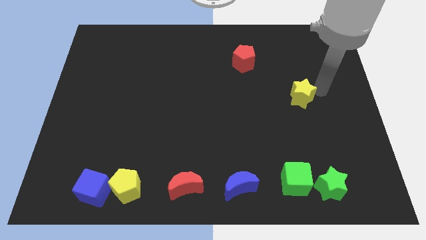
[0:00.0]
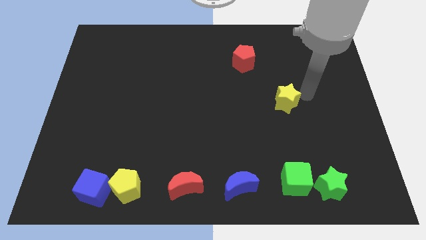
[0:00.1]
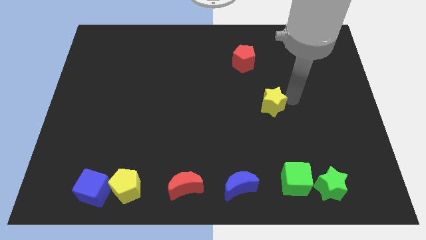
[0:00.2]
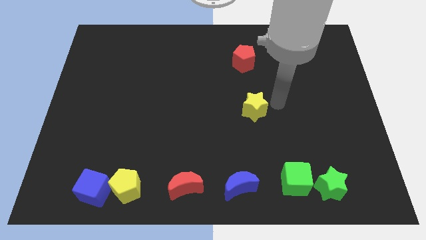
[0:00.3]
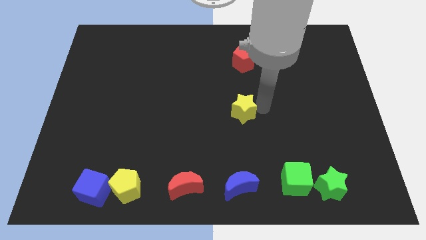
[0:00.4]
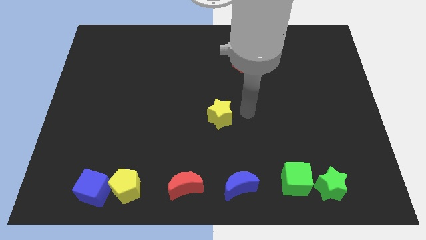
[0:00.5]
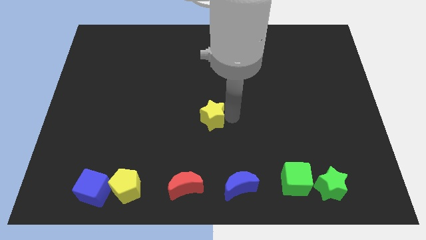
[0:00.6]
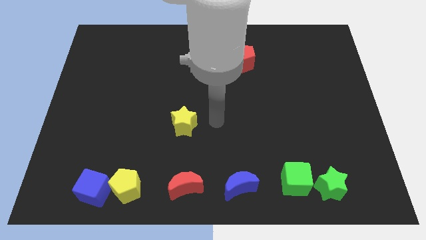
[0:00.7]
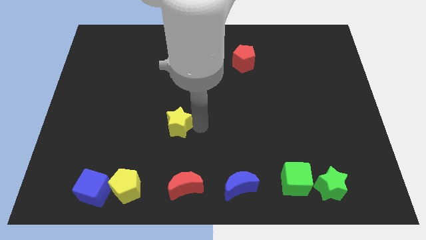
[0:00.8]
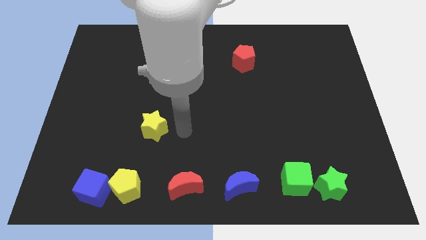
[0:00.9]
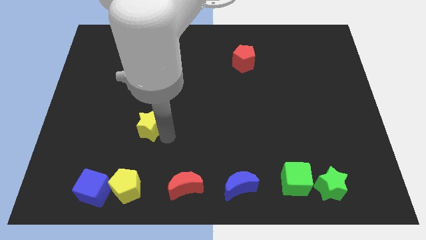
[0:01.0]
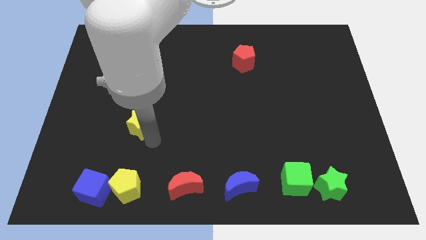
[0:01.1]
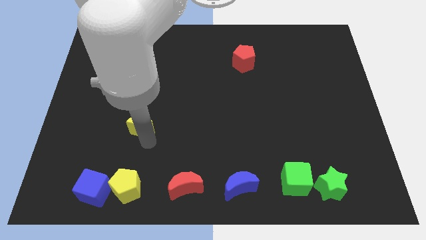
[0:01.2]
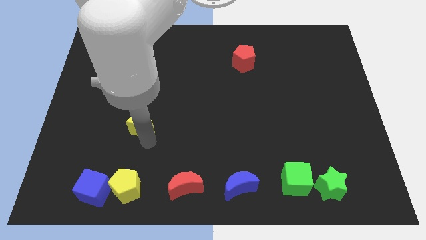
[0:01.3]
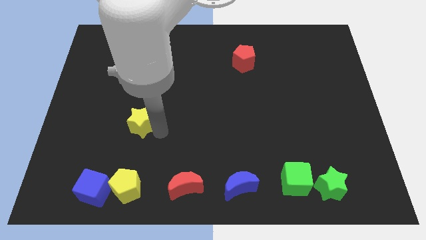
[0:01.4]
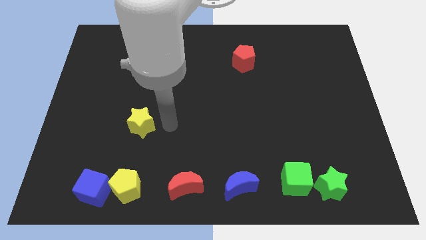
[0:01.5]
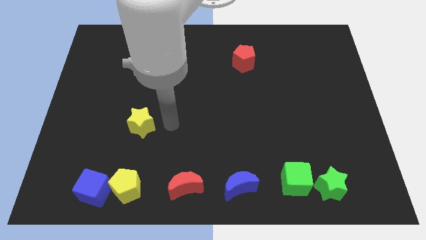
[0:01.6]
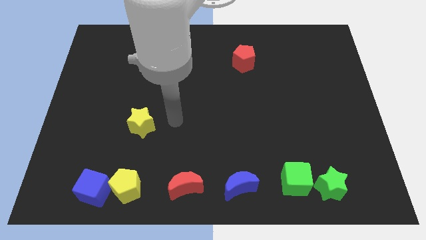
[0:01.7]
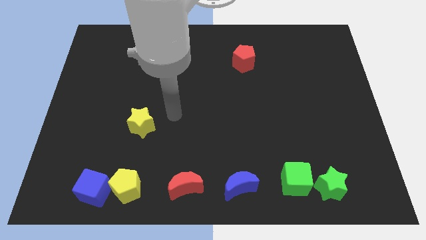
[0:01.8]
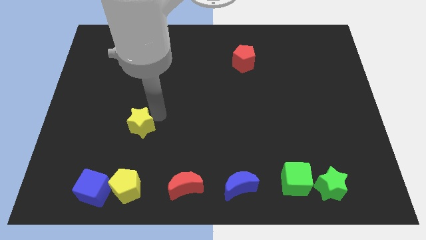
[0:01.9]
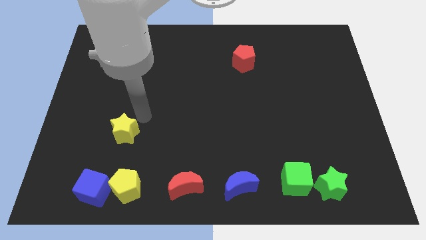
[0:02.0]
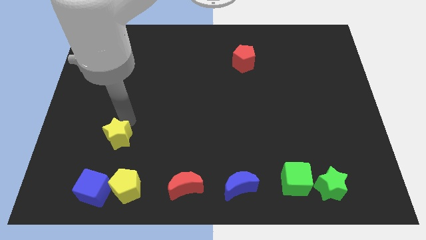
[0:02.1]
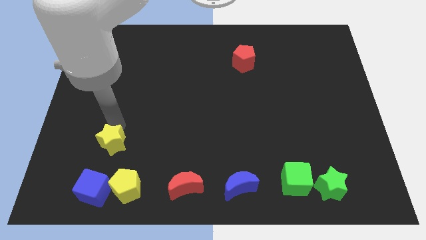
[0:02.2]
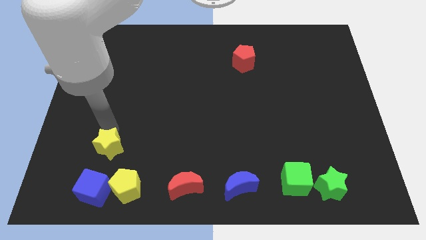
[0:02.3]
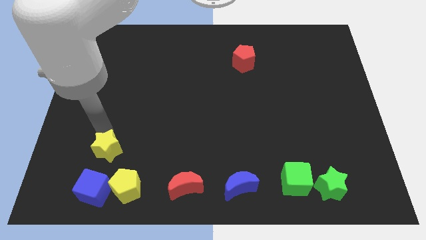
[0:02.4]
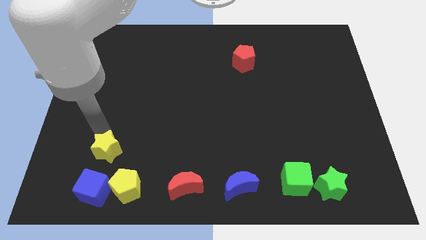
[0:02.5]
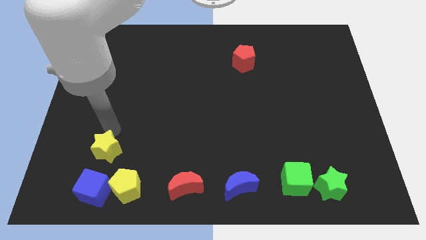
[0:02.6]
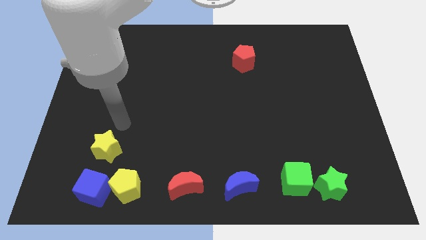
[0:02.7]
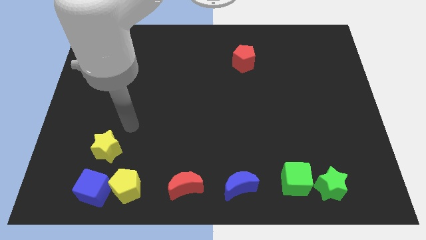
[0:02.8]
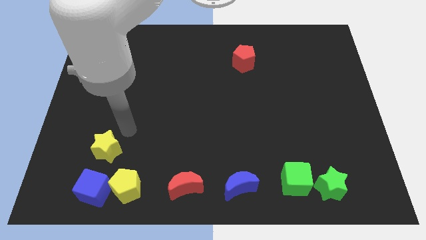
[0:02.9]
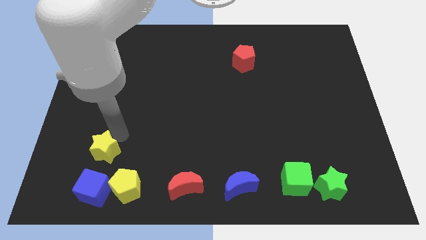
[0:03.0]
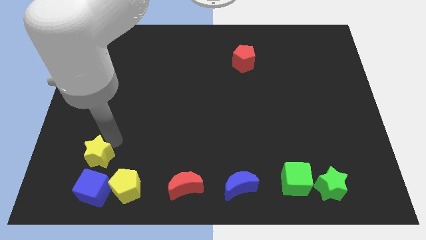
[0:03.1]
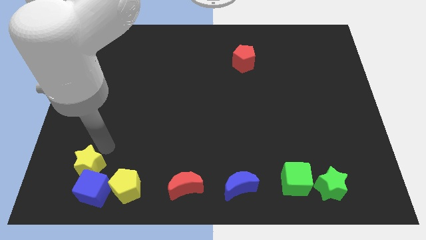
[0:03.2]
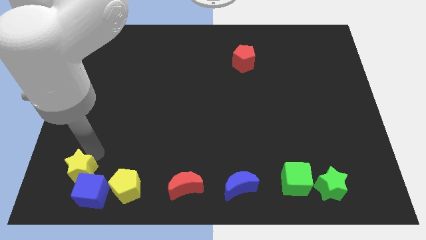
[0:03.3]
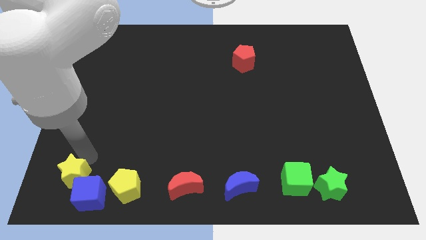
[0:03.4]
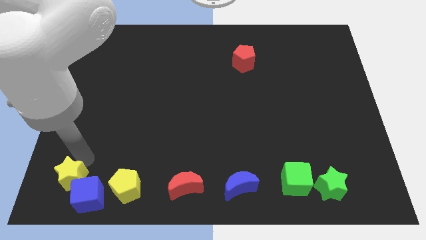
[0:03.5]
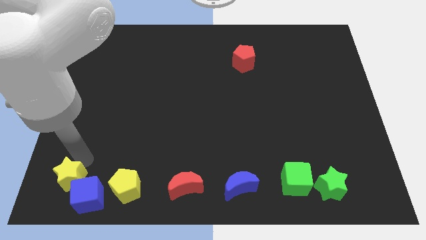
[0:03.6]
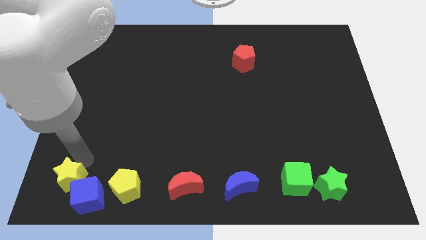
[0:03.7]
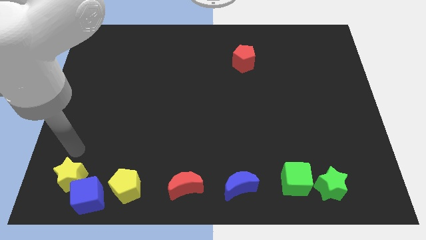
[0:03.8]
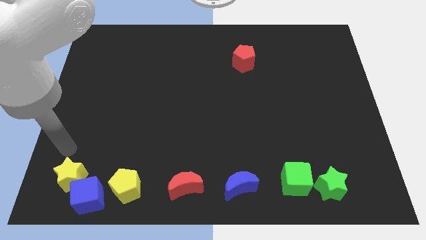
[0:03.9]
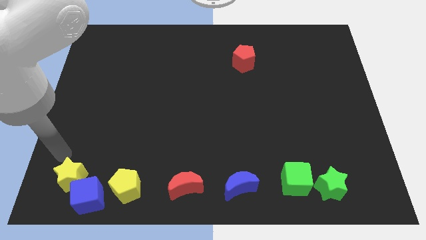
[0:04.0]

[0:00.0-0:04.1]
slide yellow star into blue cube

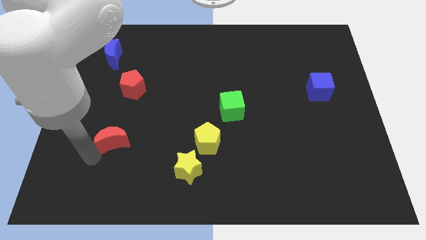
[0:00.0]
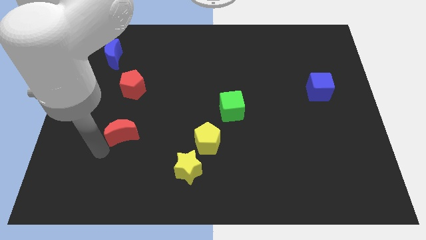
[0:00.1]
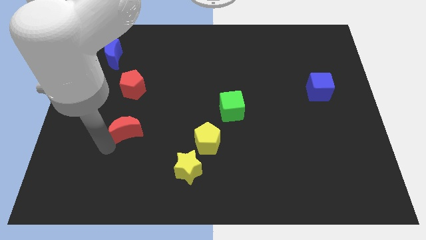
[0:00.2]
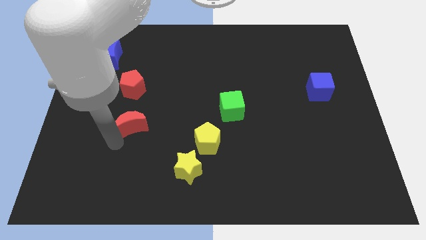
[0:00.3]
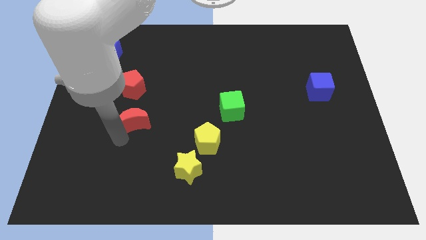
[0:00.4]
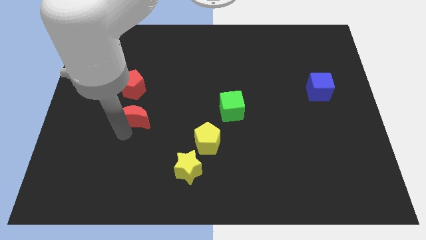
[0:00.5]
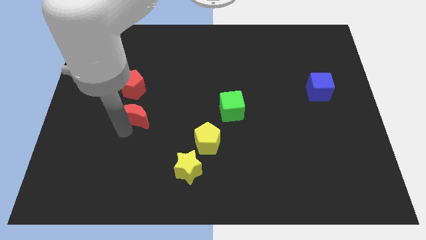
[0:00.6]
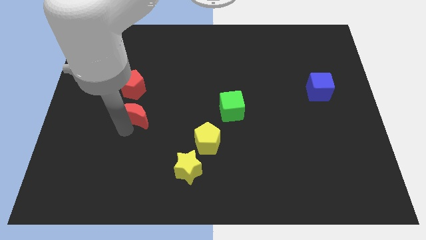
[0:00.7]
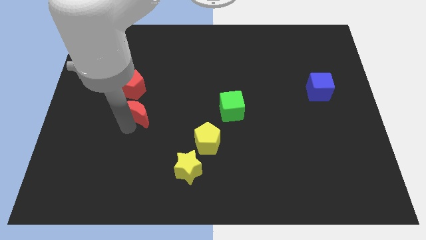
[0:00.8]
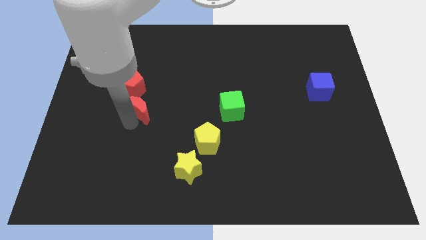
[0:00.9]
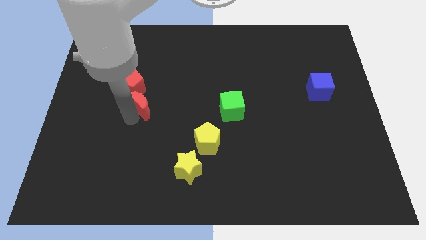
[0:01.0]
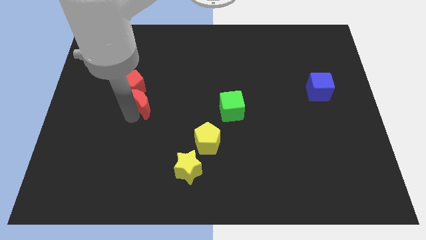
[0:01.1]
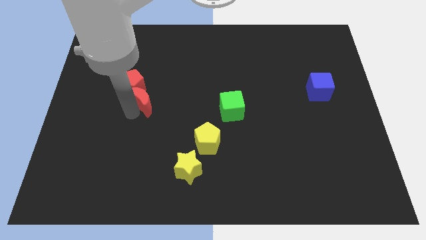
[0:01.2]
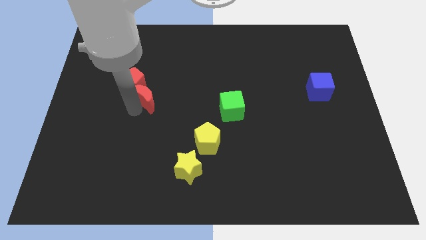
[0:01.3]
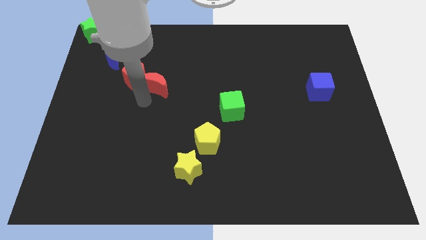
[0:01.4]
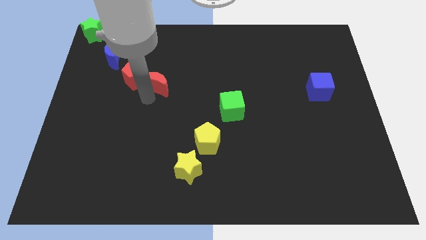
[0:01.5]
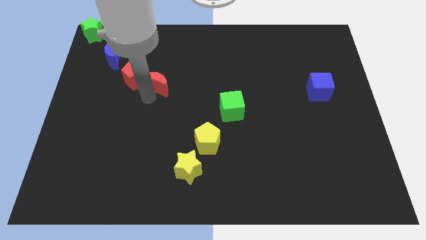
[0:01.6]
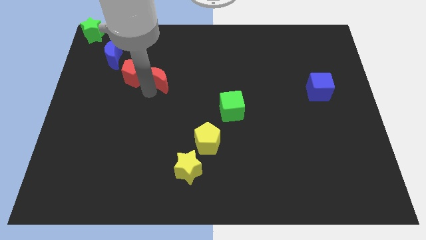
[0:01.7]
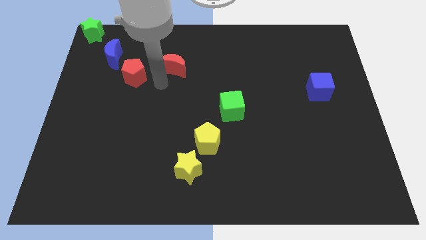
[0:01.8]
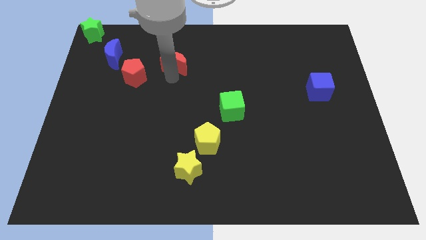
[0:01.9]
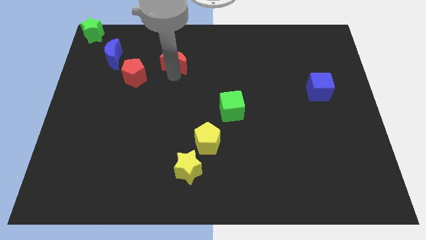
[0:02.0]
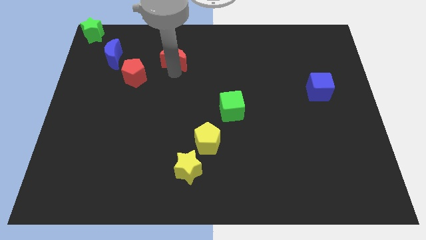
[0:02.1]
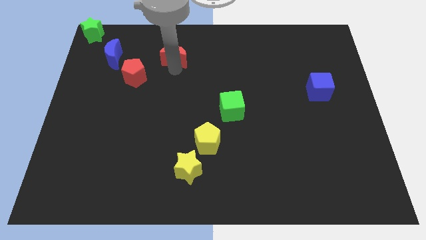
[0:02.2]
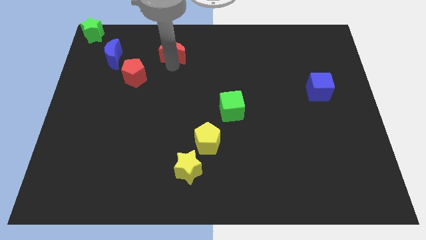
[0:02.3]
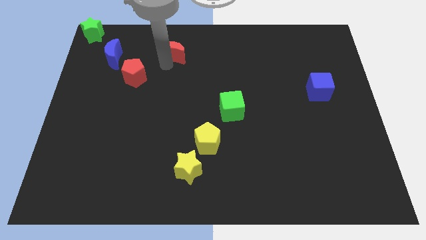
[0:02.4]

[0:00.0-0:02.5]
push the red crescent to the top side

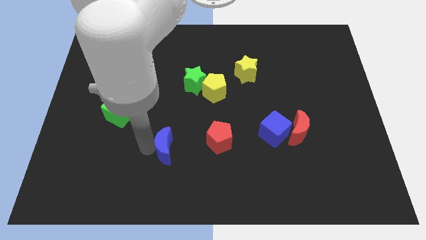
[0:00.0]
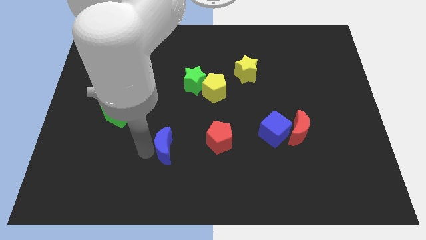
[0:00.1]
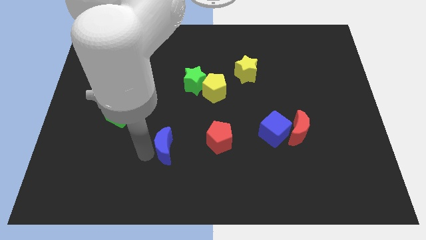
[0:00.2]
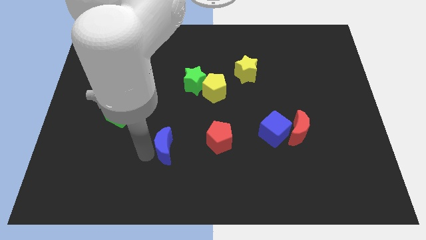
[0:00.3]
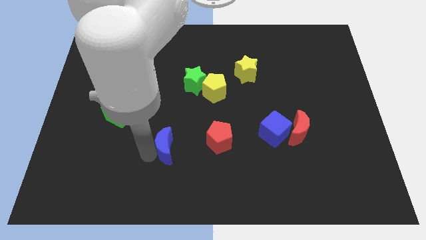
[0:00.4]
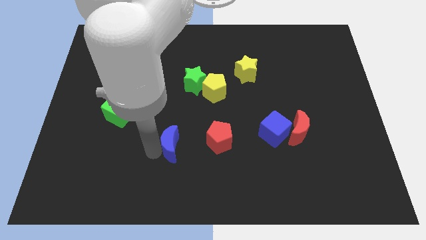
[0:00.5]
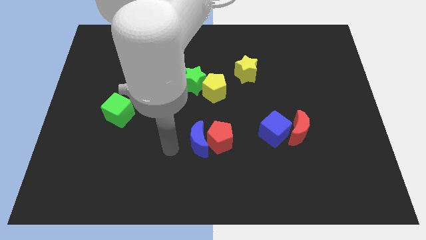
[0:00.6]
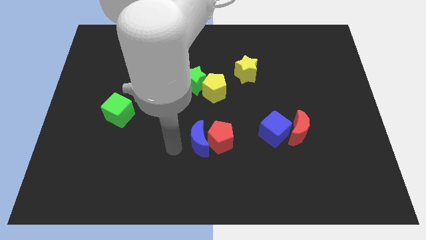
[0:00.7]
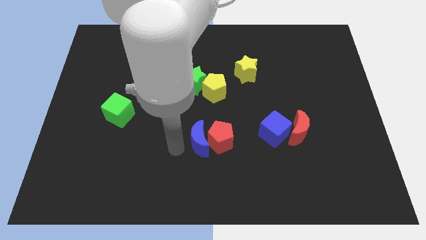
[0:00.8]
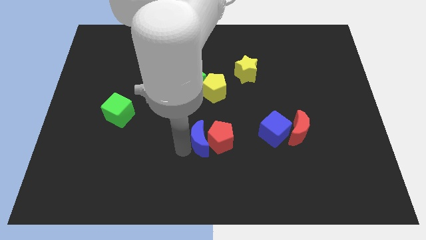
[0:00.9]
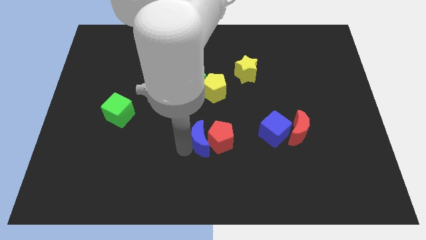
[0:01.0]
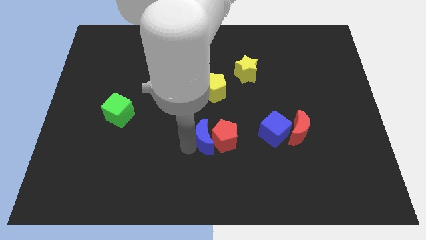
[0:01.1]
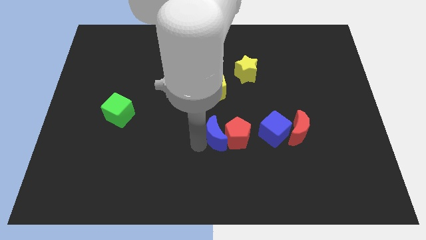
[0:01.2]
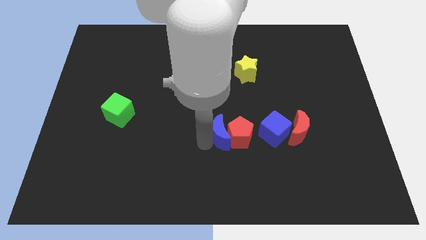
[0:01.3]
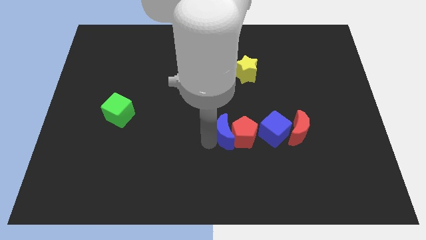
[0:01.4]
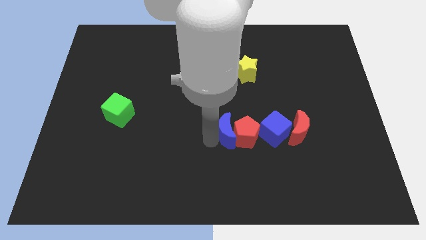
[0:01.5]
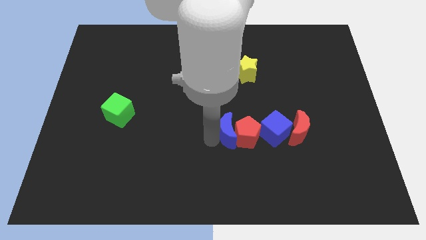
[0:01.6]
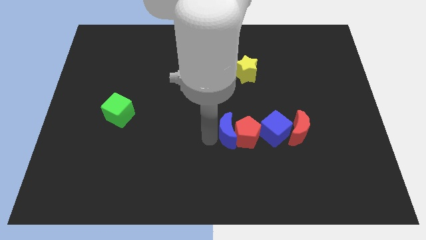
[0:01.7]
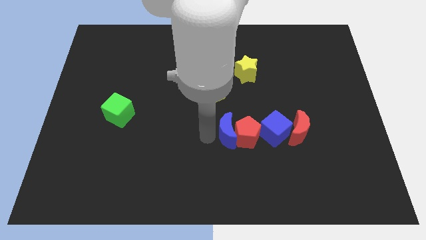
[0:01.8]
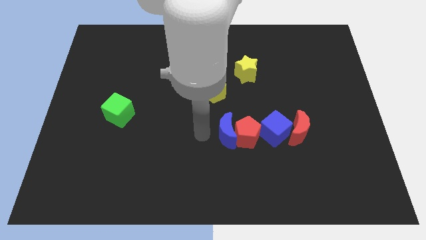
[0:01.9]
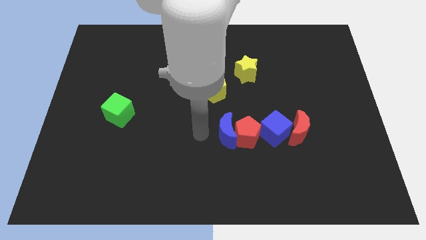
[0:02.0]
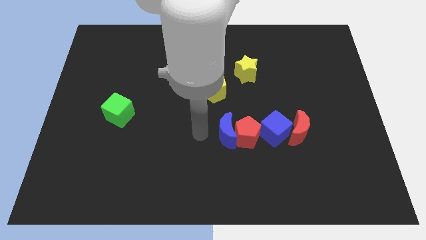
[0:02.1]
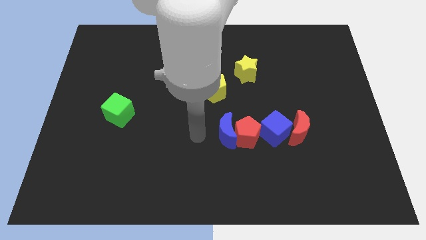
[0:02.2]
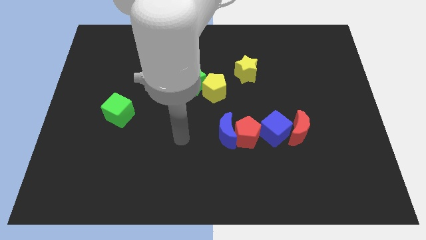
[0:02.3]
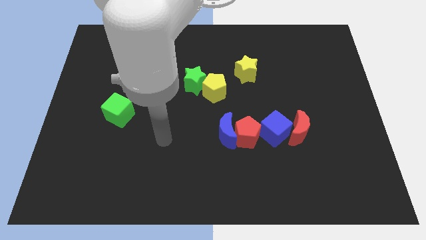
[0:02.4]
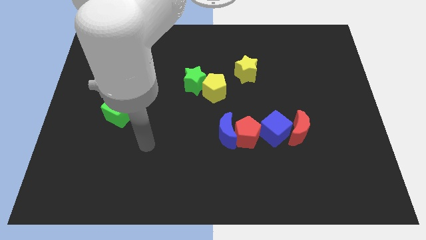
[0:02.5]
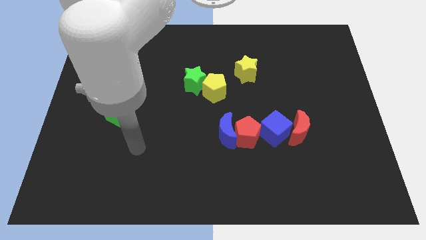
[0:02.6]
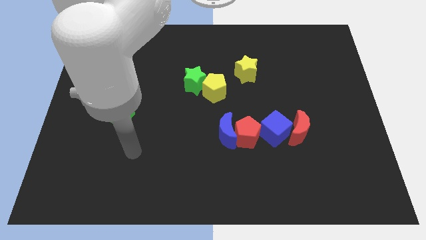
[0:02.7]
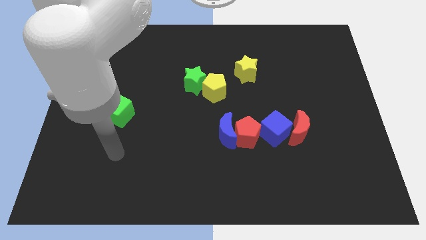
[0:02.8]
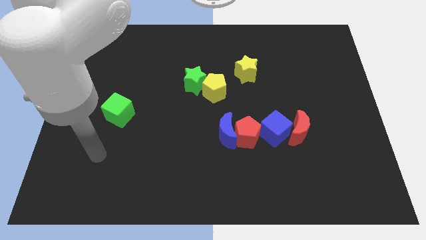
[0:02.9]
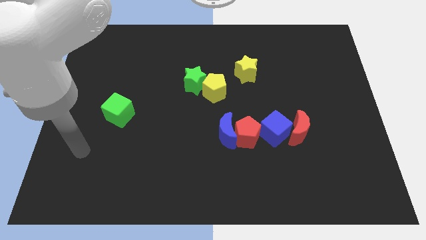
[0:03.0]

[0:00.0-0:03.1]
push the blue moon into the red pentagon
